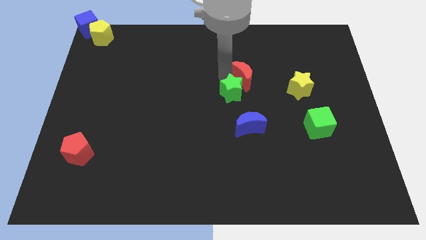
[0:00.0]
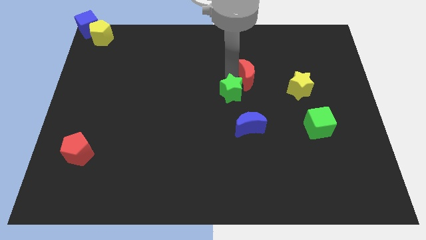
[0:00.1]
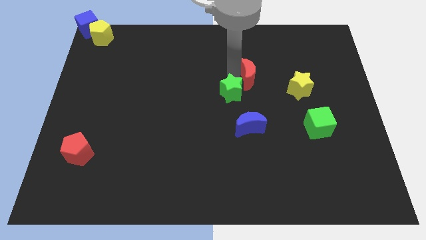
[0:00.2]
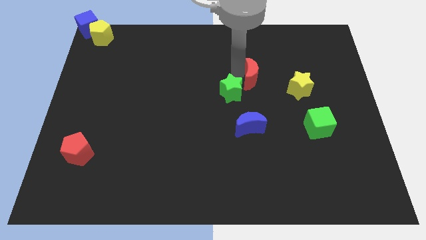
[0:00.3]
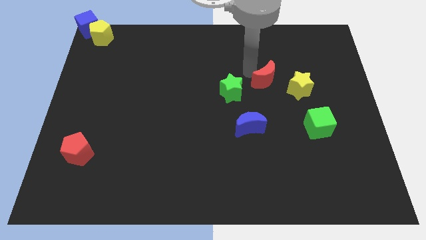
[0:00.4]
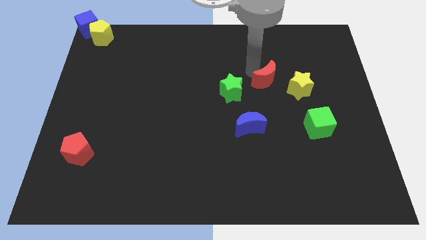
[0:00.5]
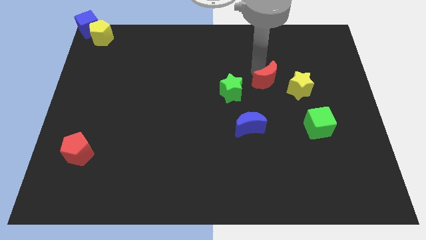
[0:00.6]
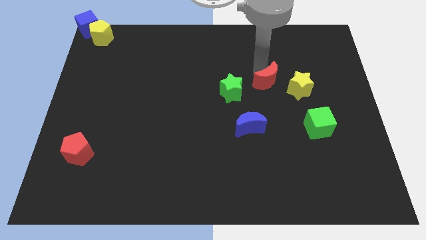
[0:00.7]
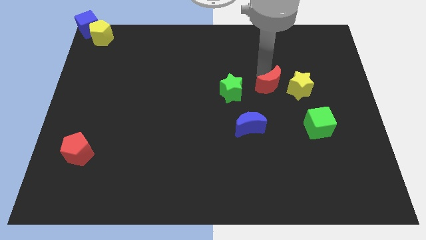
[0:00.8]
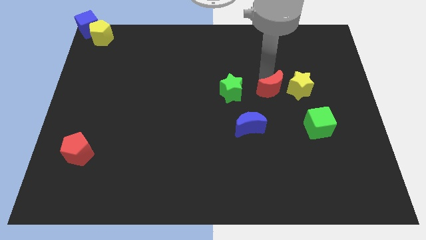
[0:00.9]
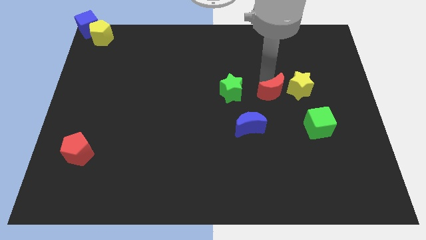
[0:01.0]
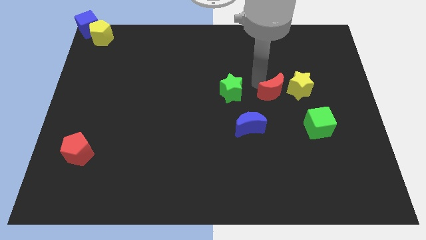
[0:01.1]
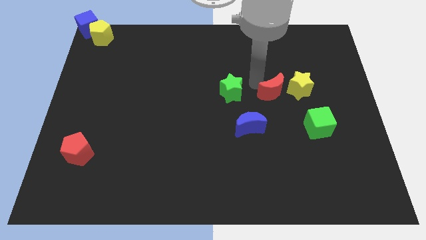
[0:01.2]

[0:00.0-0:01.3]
place the red crescent in between the green star and the yellow star to form a horizontal line

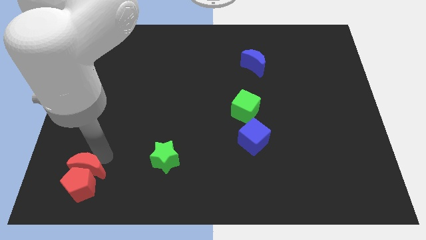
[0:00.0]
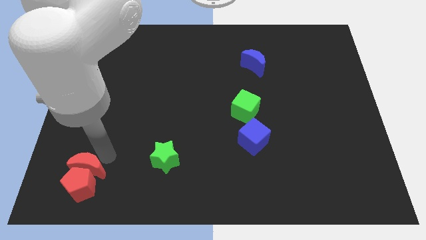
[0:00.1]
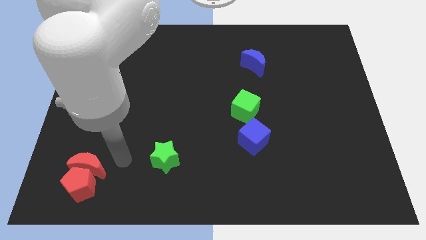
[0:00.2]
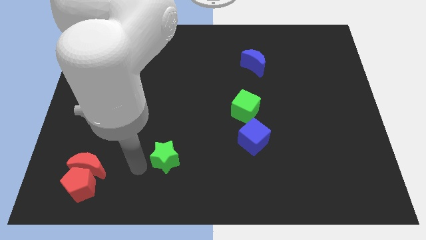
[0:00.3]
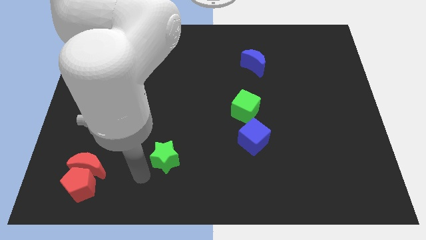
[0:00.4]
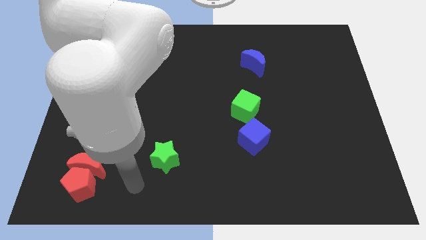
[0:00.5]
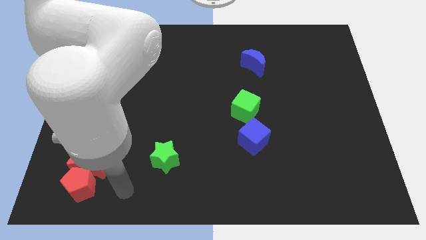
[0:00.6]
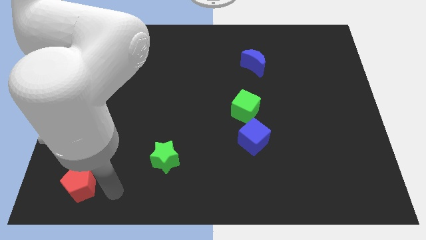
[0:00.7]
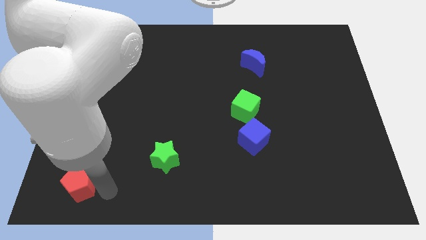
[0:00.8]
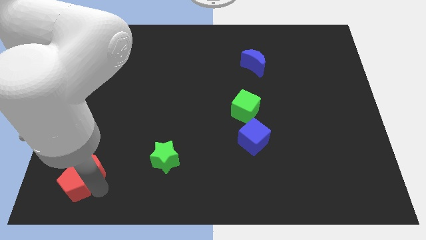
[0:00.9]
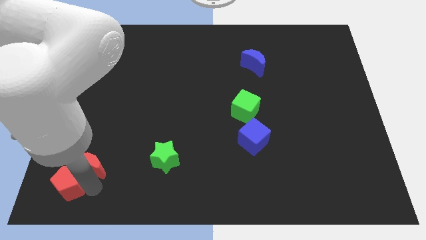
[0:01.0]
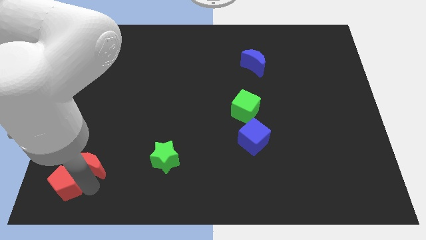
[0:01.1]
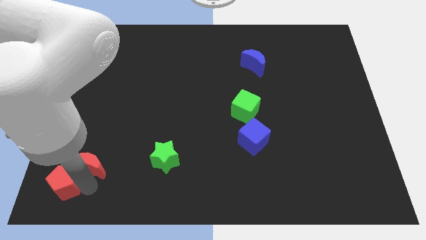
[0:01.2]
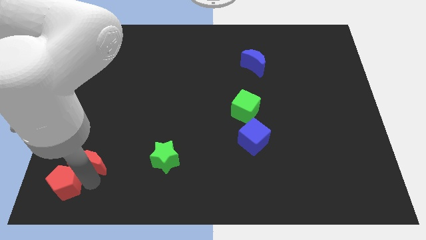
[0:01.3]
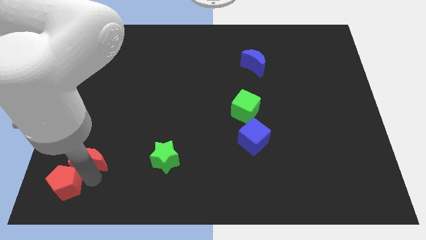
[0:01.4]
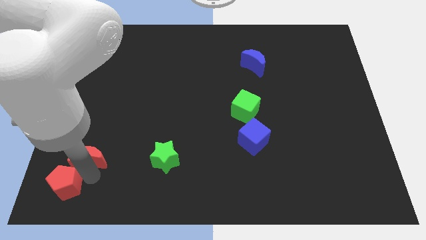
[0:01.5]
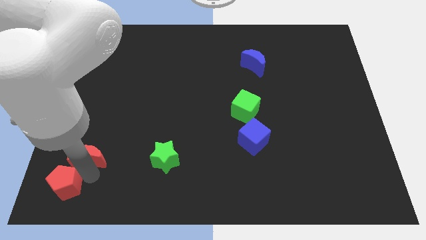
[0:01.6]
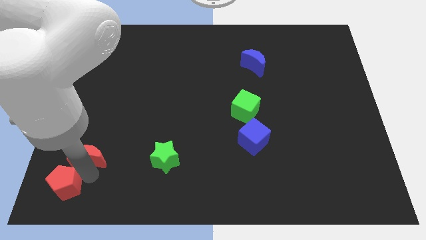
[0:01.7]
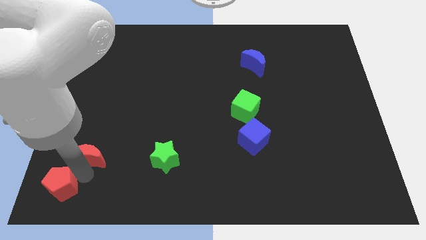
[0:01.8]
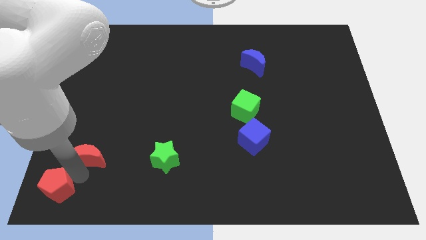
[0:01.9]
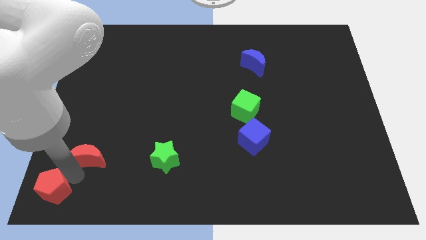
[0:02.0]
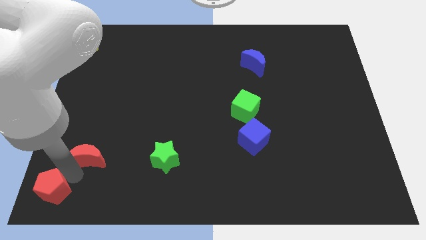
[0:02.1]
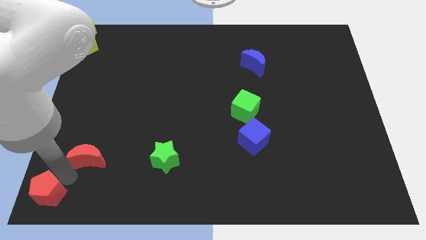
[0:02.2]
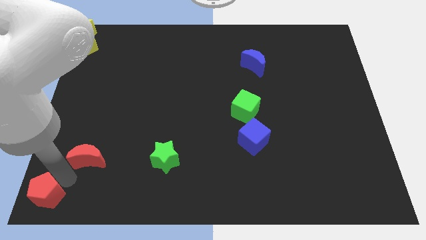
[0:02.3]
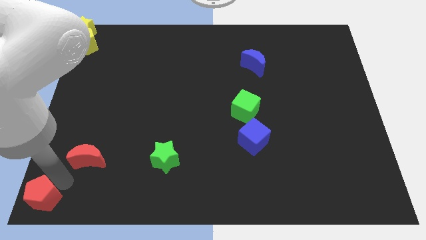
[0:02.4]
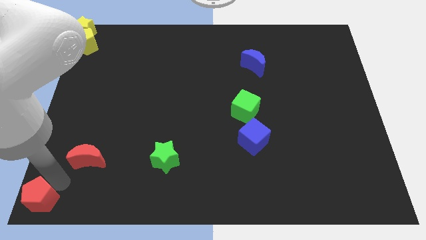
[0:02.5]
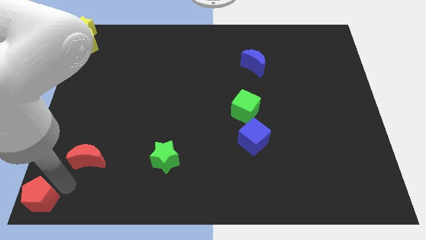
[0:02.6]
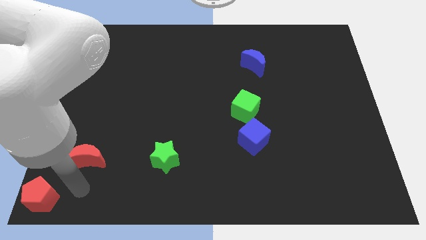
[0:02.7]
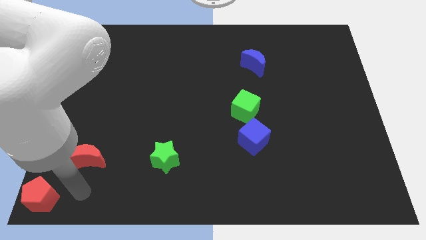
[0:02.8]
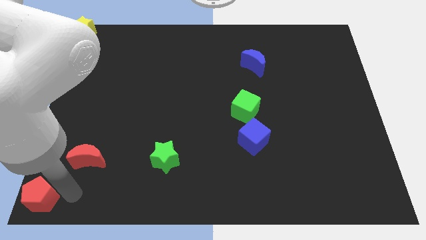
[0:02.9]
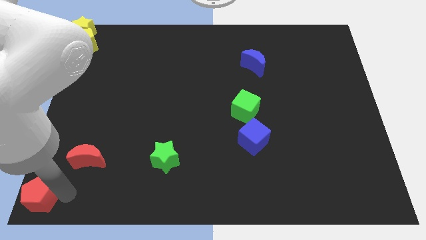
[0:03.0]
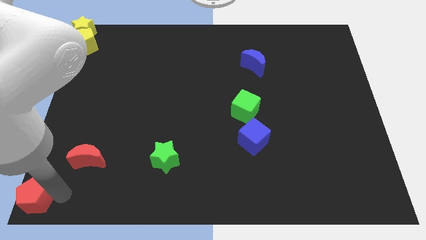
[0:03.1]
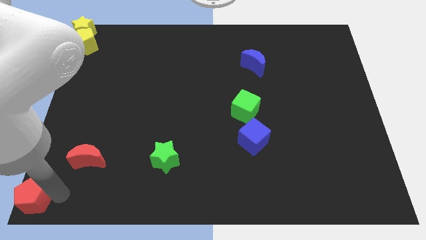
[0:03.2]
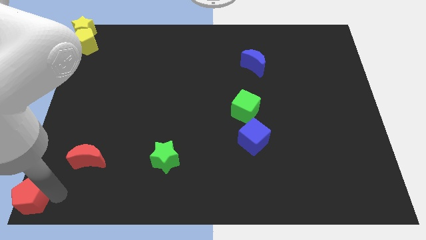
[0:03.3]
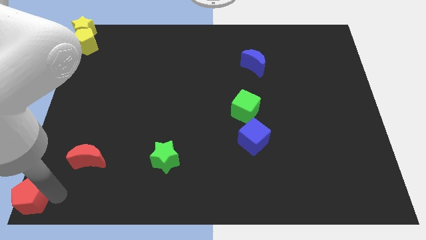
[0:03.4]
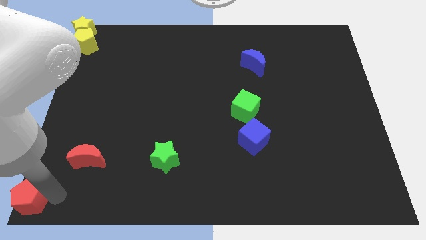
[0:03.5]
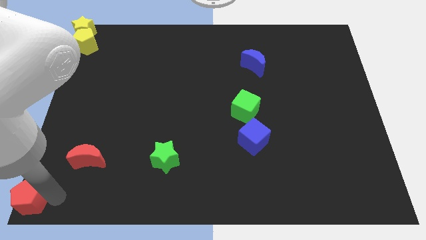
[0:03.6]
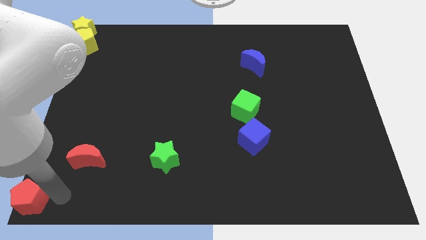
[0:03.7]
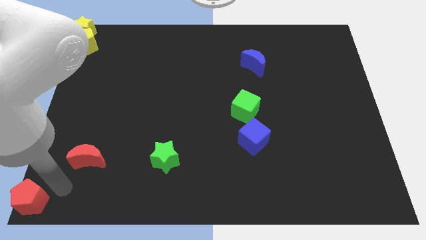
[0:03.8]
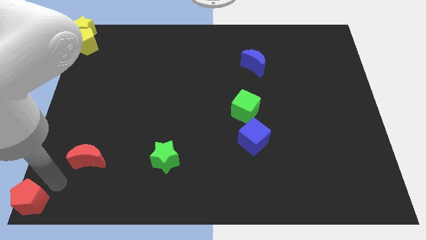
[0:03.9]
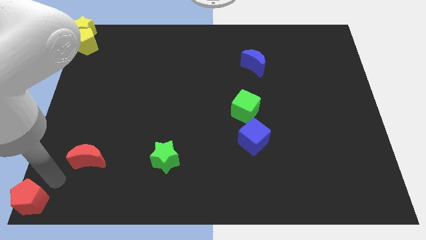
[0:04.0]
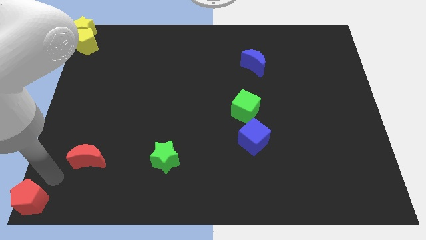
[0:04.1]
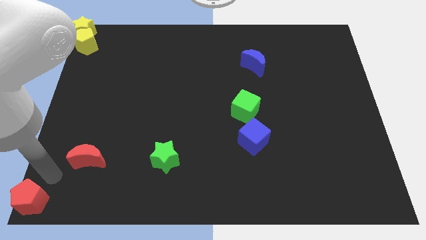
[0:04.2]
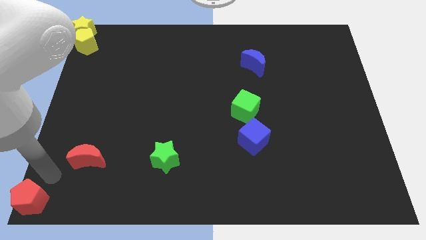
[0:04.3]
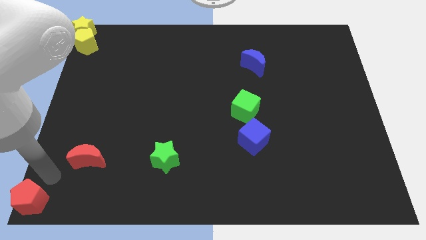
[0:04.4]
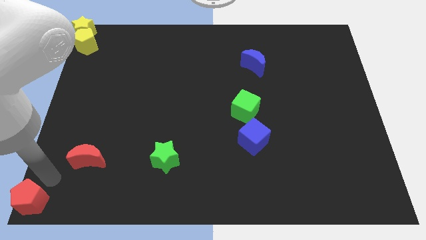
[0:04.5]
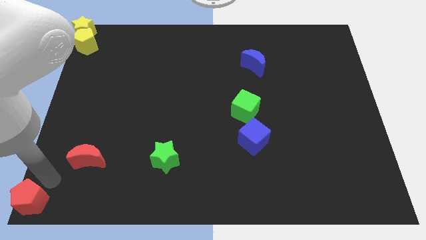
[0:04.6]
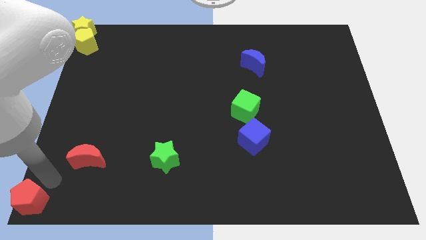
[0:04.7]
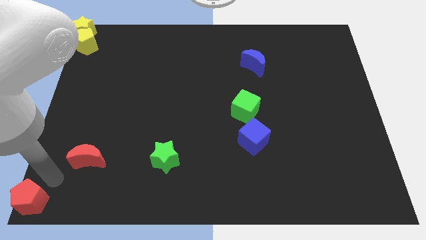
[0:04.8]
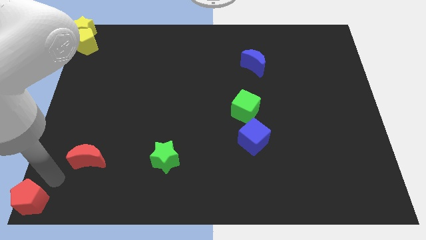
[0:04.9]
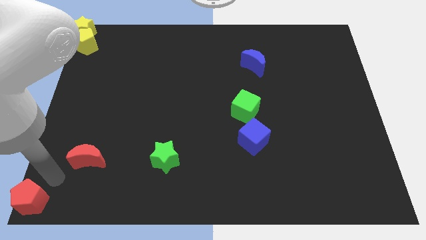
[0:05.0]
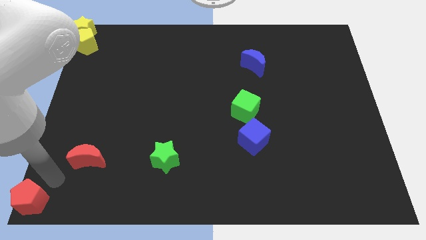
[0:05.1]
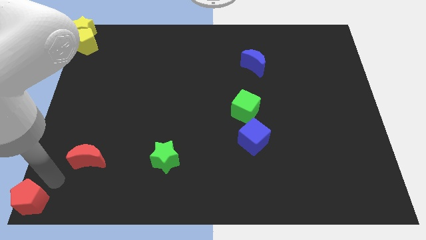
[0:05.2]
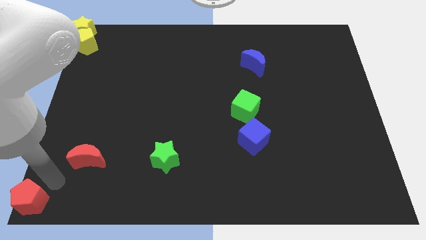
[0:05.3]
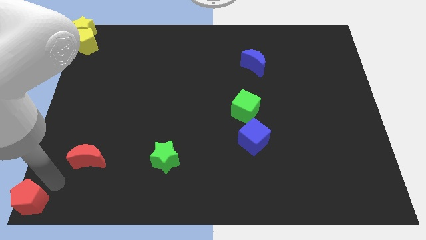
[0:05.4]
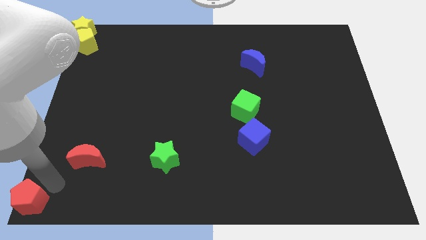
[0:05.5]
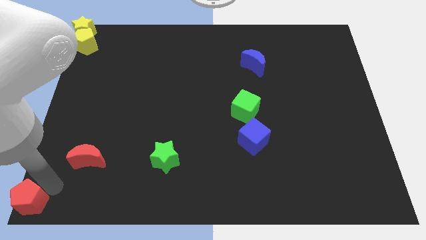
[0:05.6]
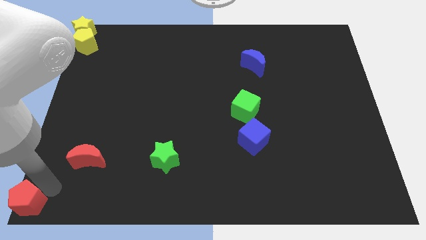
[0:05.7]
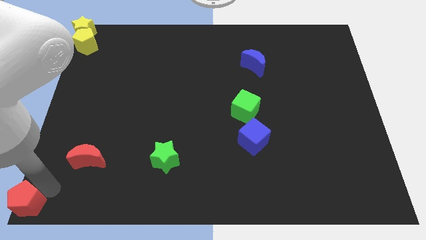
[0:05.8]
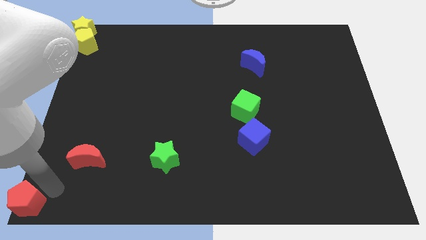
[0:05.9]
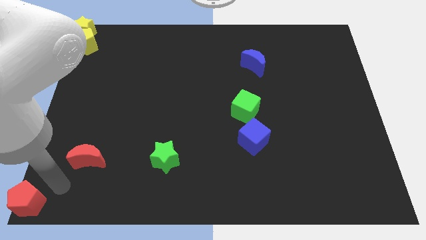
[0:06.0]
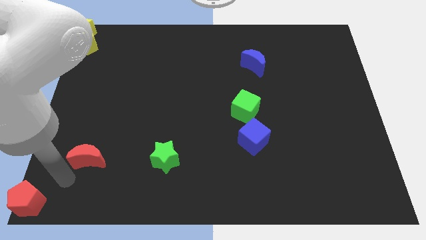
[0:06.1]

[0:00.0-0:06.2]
move the red pentagon to the bottom left corner of the board

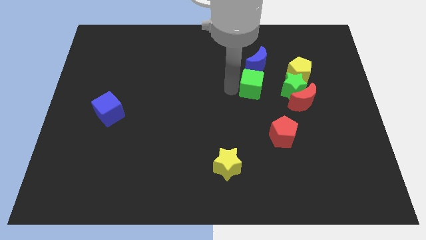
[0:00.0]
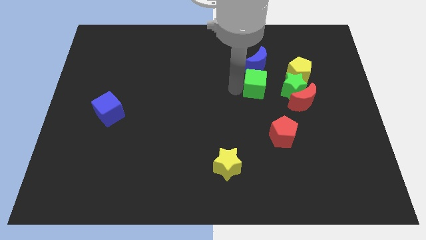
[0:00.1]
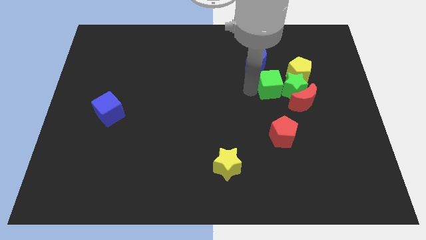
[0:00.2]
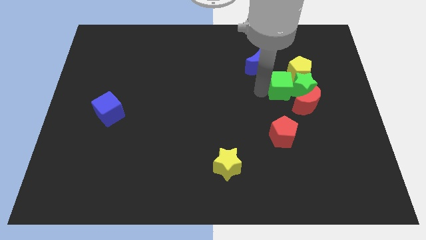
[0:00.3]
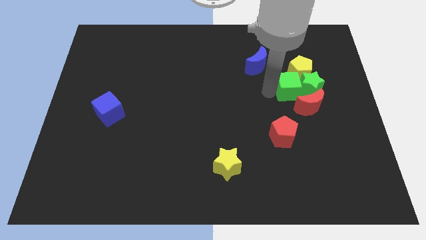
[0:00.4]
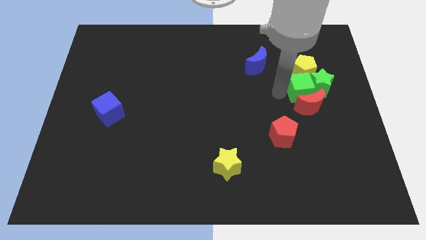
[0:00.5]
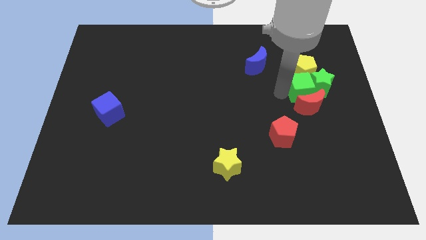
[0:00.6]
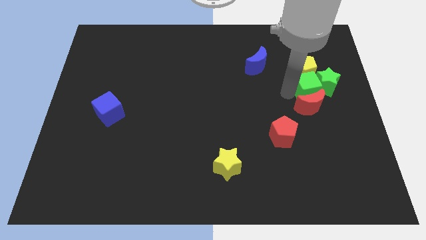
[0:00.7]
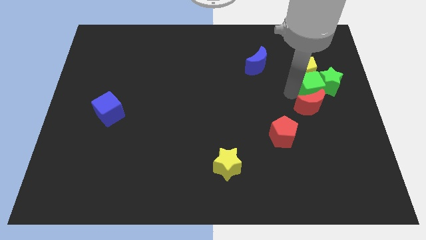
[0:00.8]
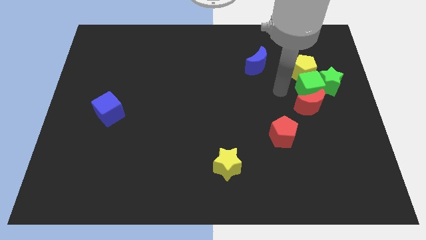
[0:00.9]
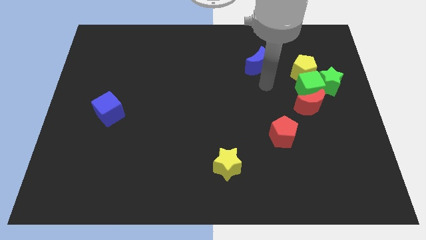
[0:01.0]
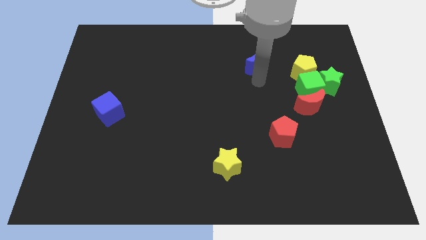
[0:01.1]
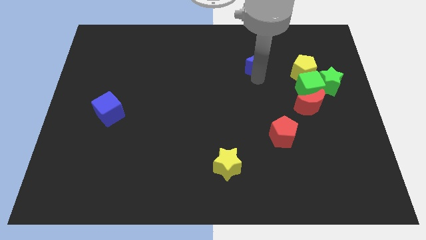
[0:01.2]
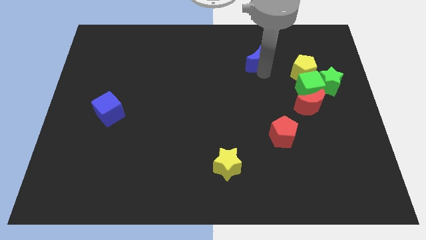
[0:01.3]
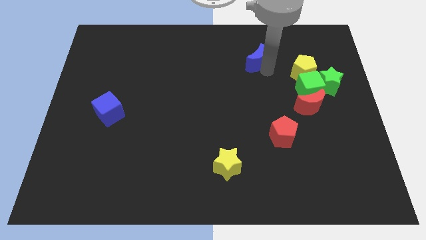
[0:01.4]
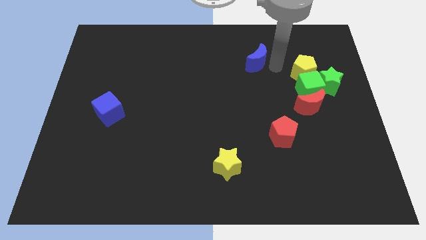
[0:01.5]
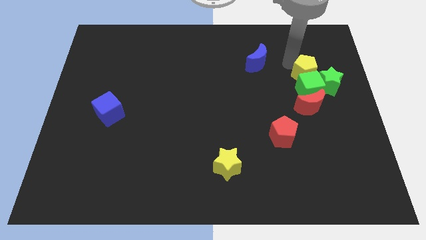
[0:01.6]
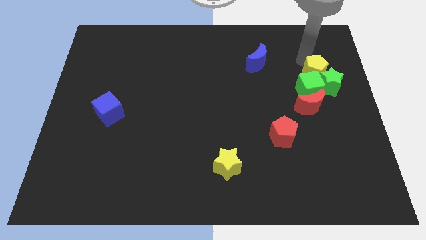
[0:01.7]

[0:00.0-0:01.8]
place the green cube between the yellow pentagon and red moon
